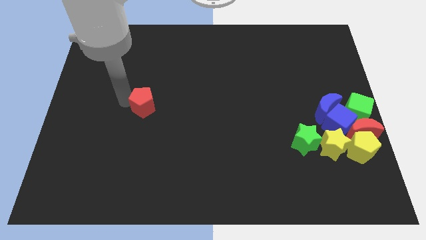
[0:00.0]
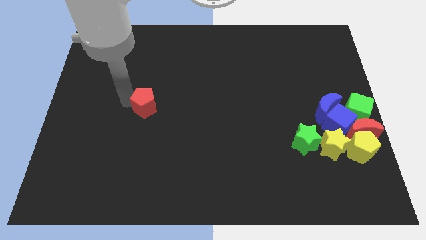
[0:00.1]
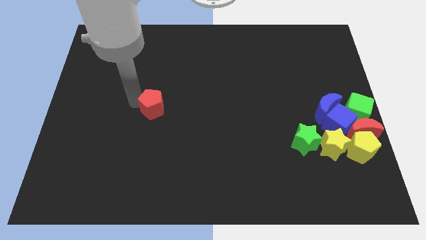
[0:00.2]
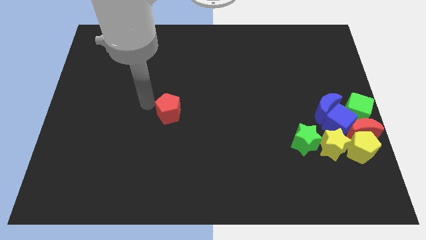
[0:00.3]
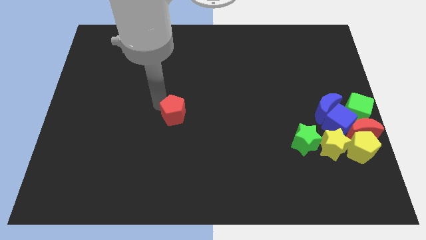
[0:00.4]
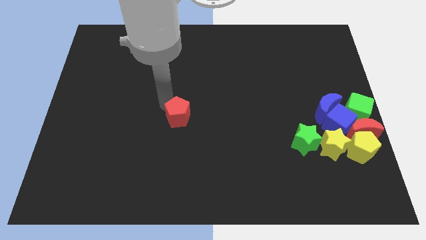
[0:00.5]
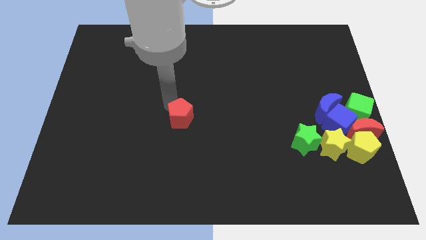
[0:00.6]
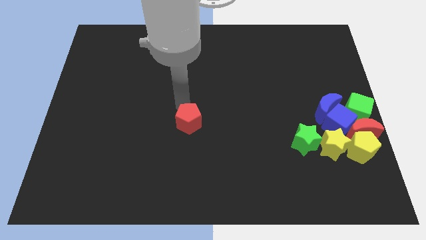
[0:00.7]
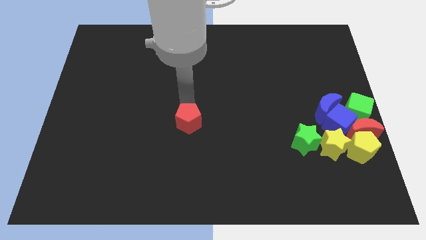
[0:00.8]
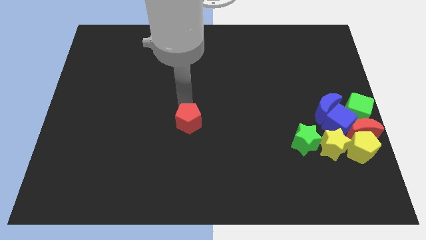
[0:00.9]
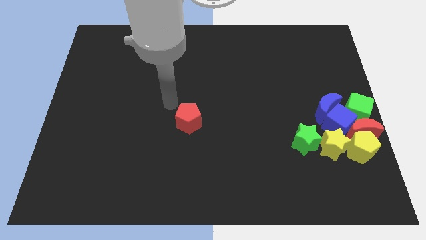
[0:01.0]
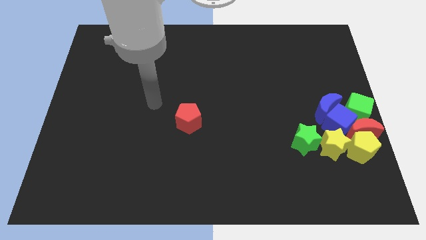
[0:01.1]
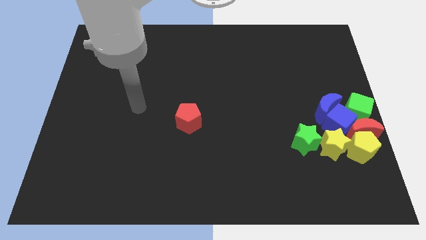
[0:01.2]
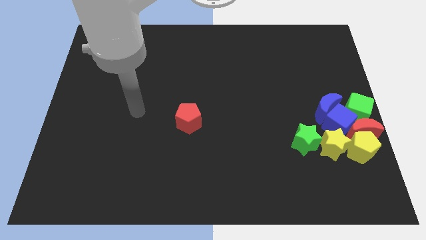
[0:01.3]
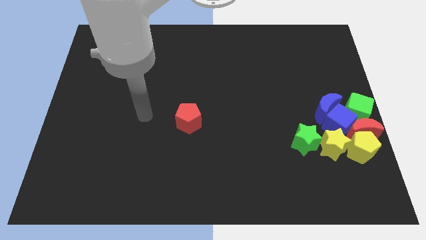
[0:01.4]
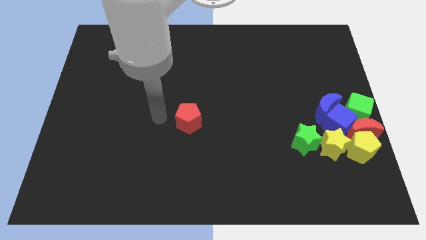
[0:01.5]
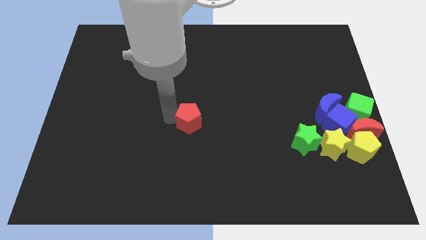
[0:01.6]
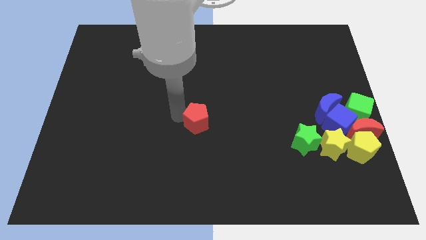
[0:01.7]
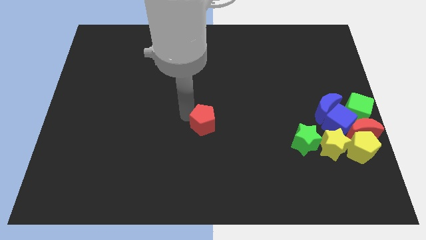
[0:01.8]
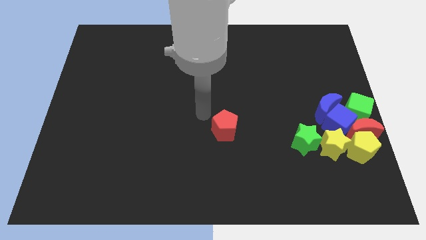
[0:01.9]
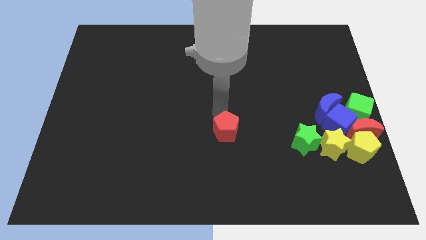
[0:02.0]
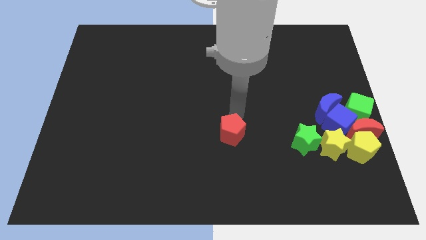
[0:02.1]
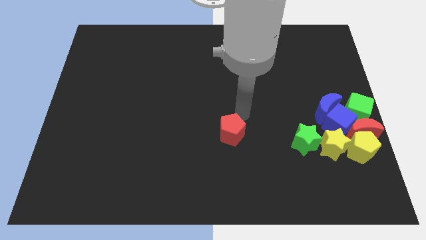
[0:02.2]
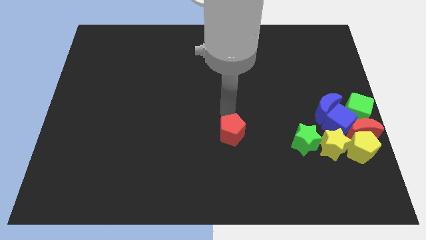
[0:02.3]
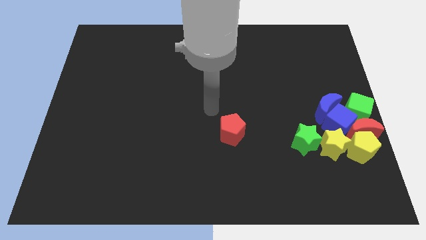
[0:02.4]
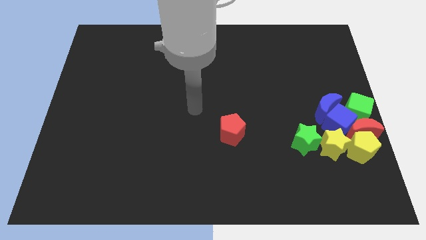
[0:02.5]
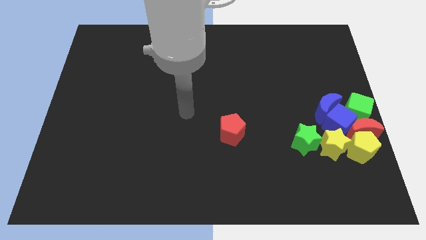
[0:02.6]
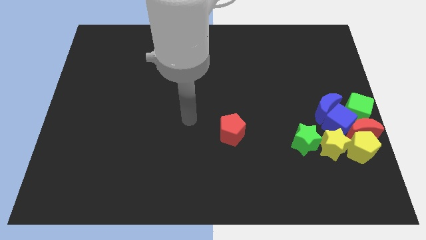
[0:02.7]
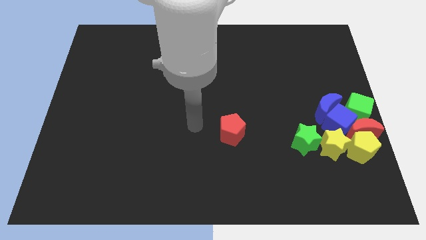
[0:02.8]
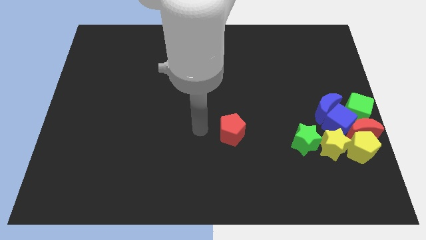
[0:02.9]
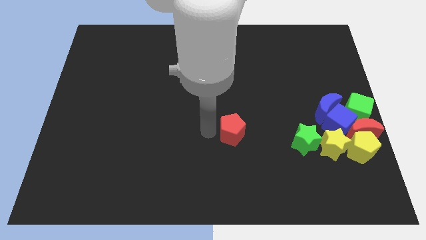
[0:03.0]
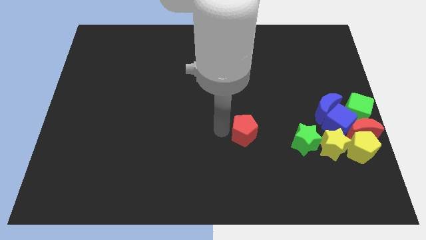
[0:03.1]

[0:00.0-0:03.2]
slide the red pentagon towards the left side of the green star

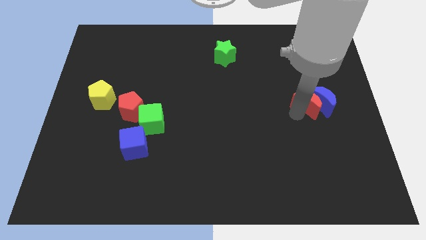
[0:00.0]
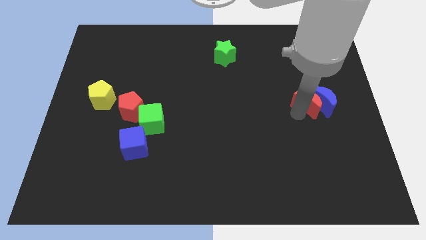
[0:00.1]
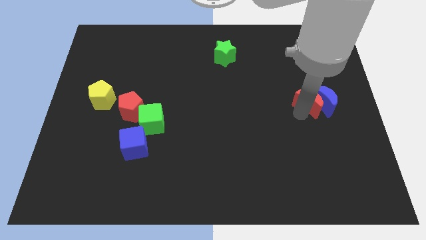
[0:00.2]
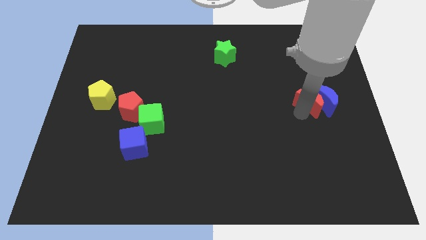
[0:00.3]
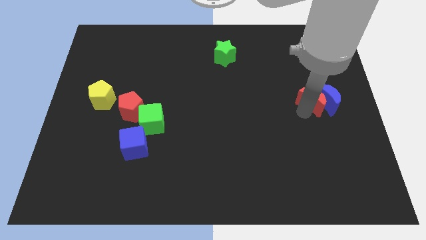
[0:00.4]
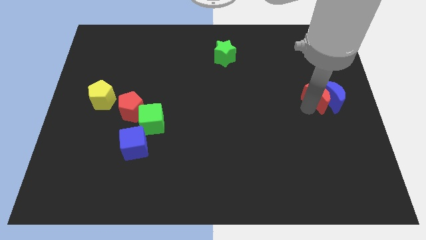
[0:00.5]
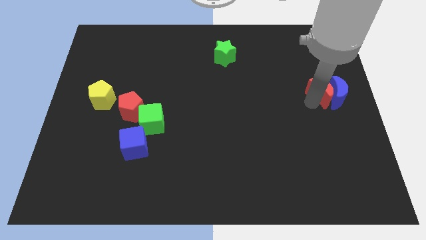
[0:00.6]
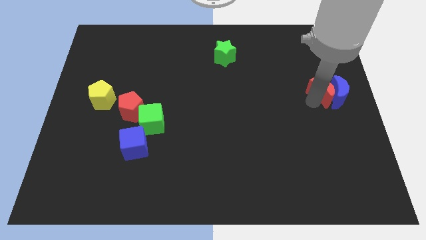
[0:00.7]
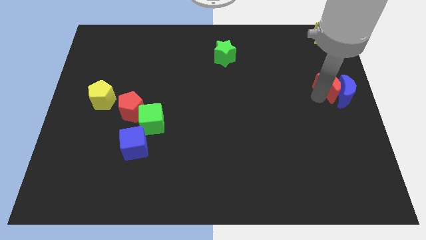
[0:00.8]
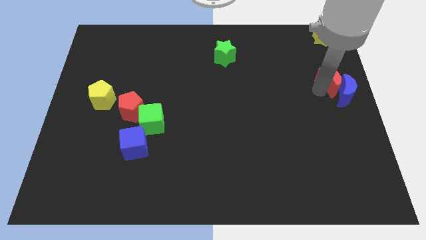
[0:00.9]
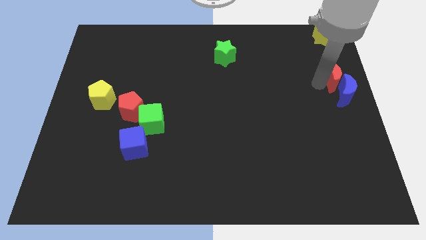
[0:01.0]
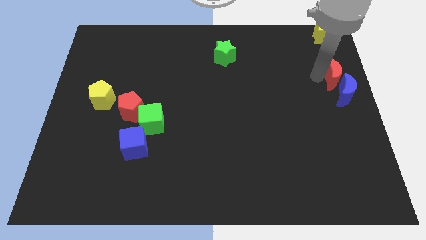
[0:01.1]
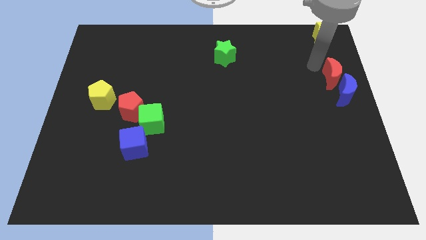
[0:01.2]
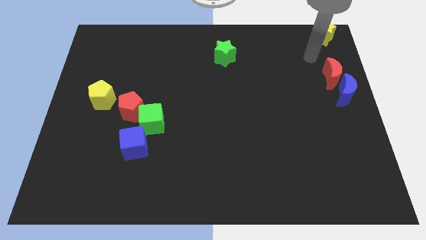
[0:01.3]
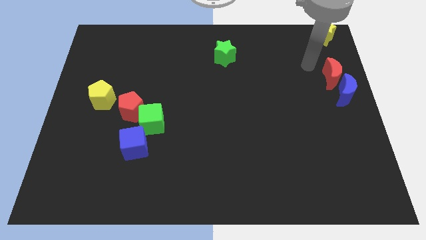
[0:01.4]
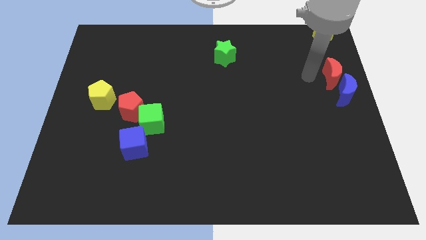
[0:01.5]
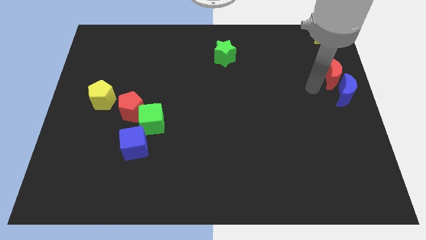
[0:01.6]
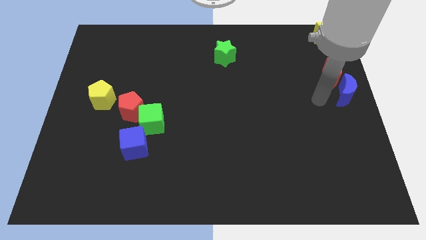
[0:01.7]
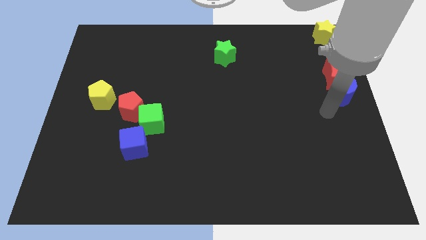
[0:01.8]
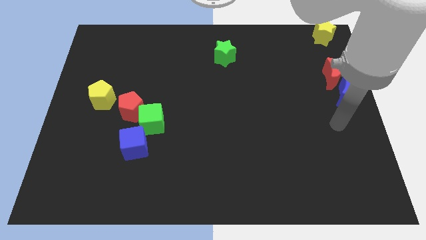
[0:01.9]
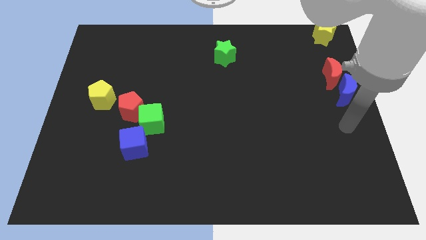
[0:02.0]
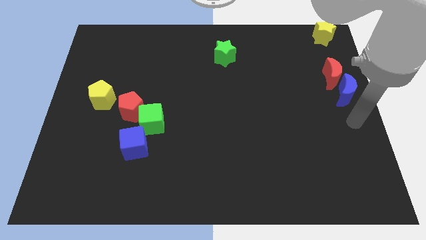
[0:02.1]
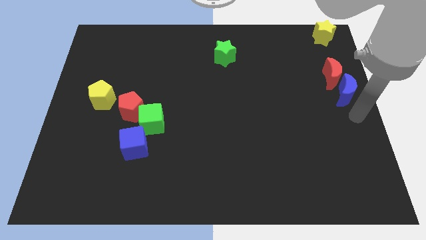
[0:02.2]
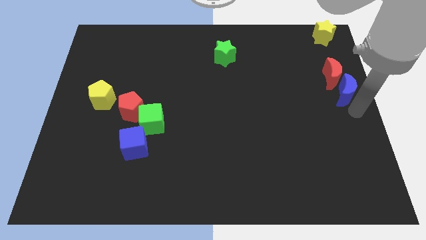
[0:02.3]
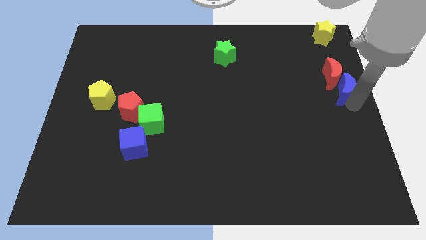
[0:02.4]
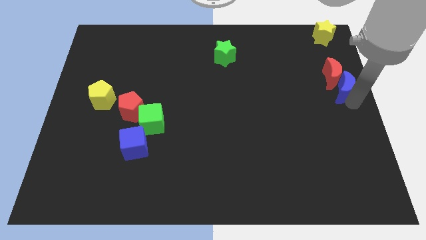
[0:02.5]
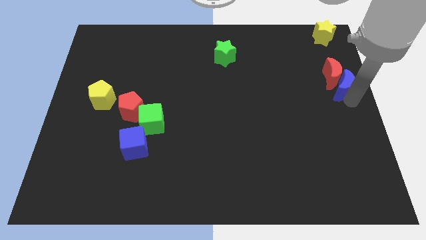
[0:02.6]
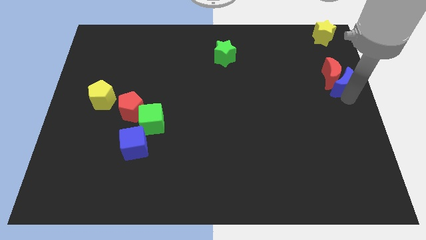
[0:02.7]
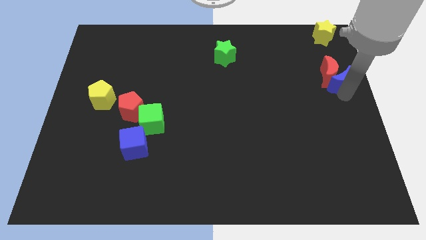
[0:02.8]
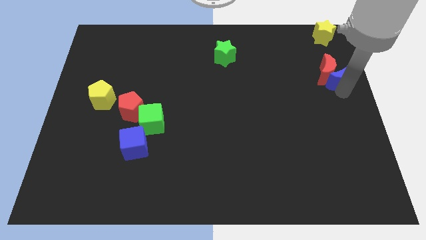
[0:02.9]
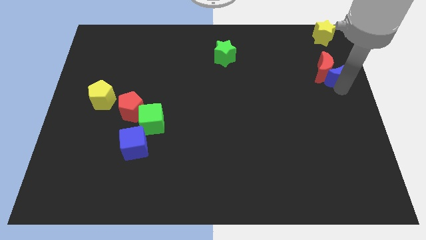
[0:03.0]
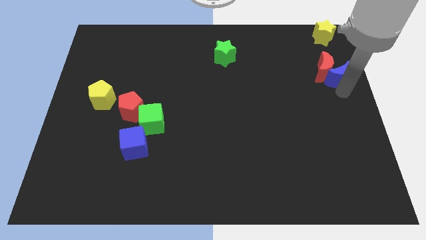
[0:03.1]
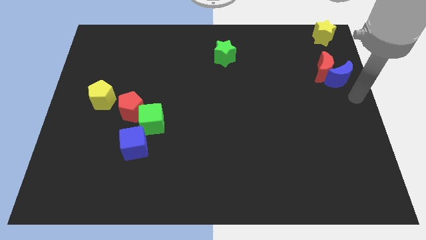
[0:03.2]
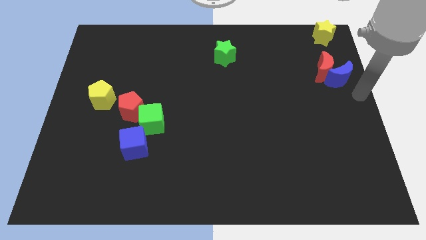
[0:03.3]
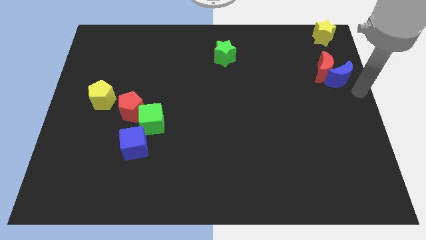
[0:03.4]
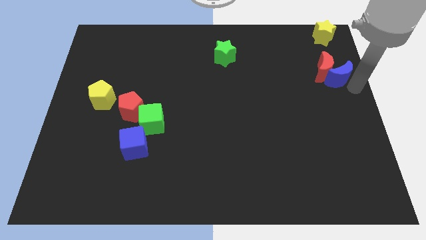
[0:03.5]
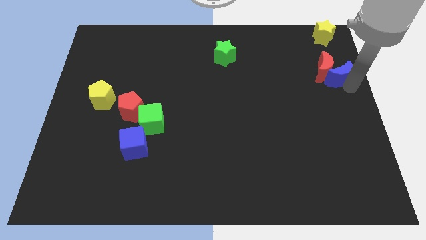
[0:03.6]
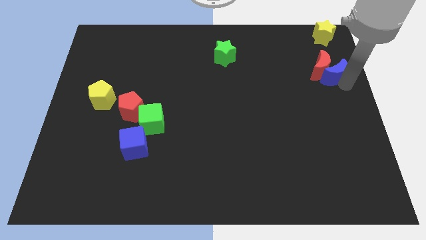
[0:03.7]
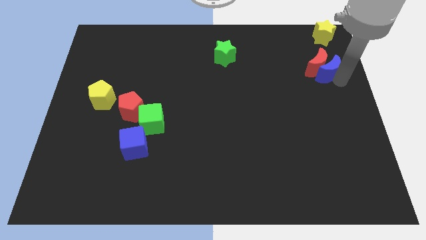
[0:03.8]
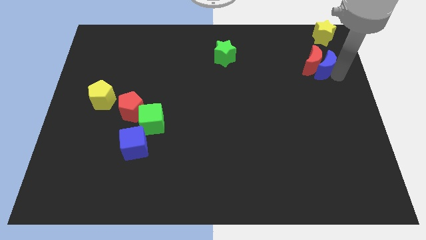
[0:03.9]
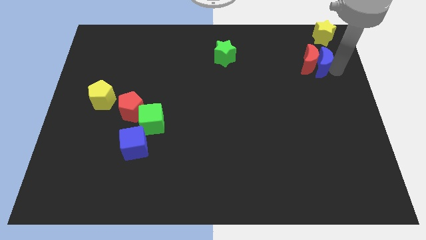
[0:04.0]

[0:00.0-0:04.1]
push the red and blue crescent to the bottom of the yellow star

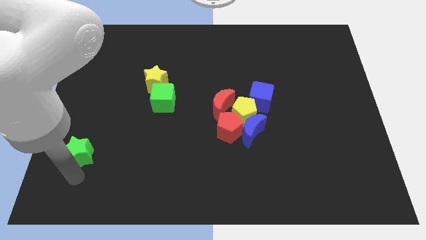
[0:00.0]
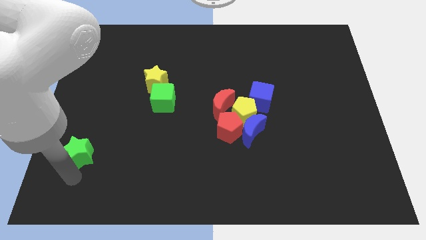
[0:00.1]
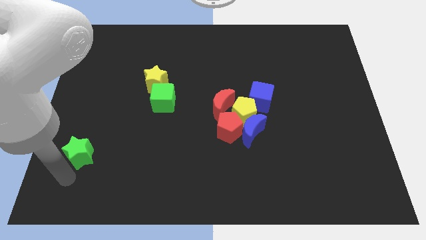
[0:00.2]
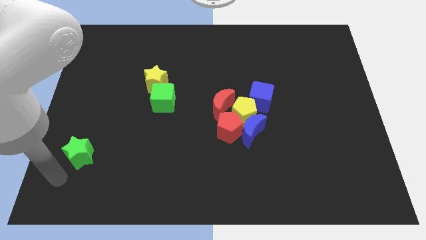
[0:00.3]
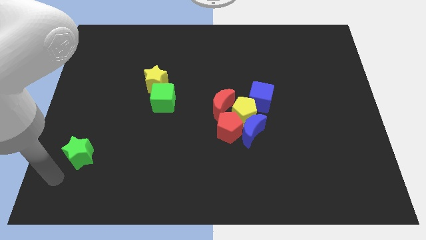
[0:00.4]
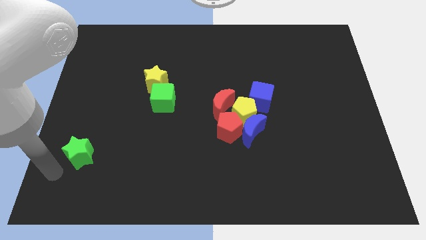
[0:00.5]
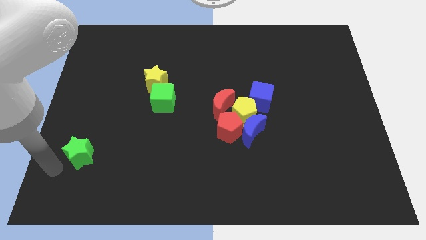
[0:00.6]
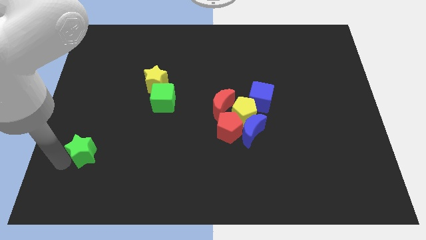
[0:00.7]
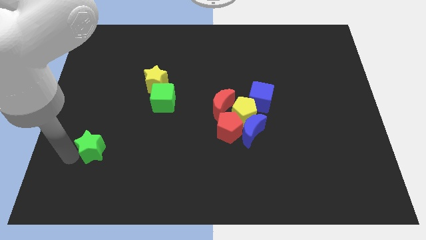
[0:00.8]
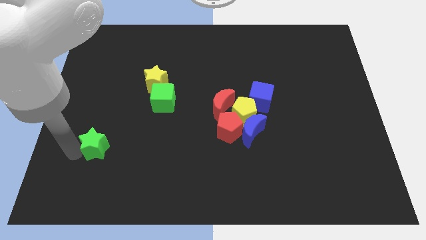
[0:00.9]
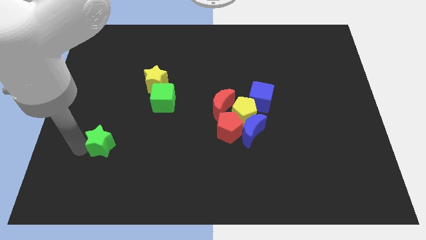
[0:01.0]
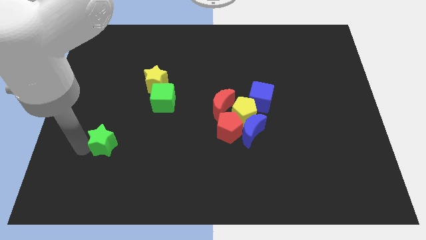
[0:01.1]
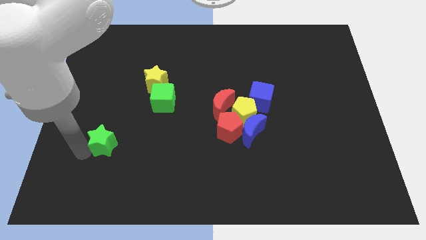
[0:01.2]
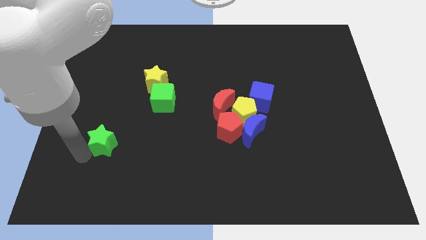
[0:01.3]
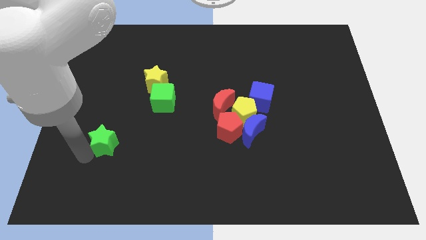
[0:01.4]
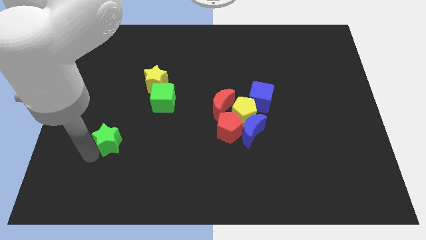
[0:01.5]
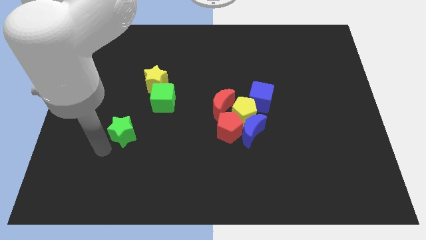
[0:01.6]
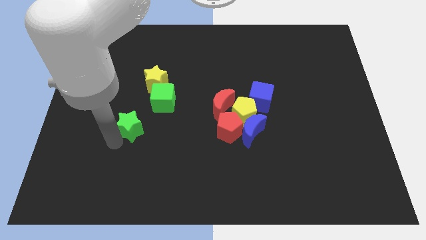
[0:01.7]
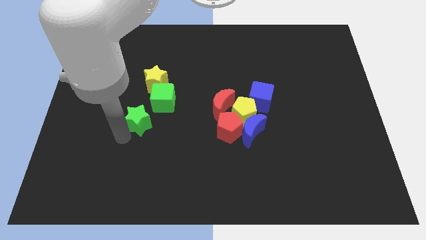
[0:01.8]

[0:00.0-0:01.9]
move the green star towards the green cube
